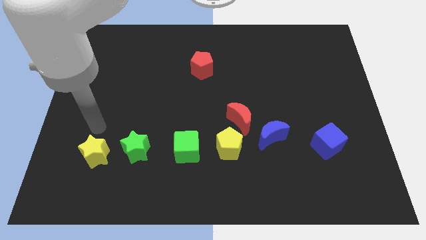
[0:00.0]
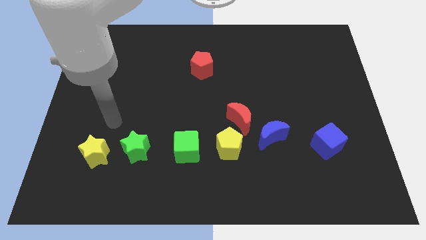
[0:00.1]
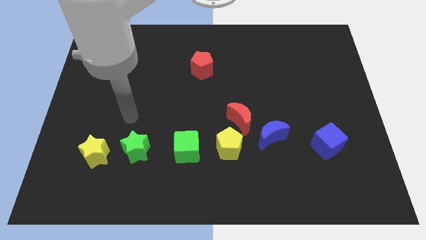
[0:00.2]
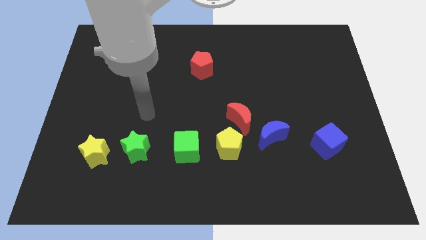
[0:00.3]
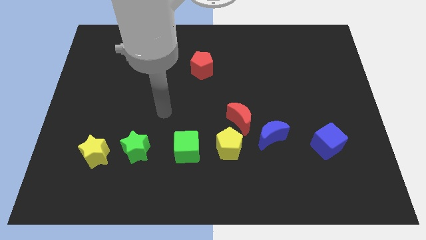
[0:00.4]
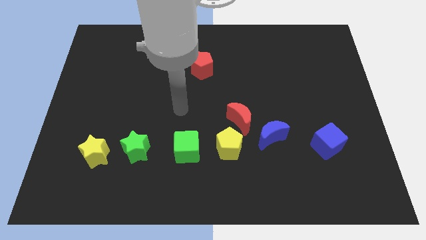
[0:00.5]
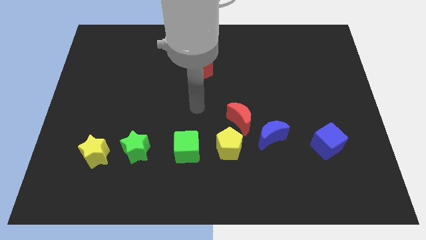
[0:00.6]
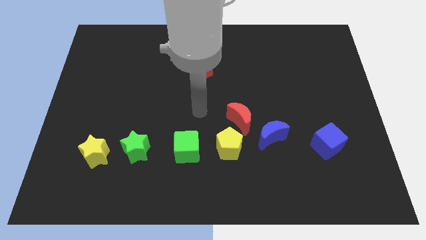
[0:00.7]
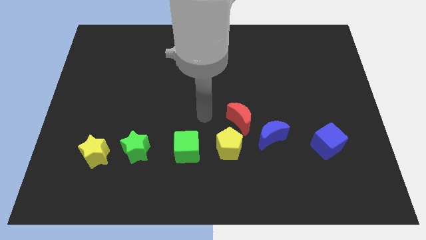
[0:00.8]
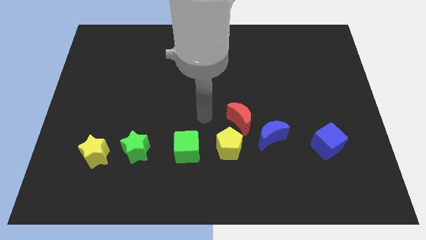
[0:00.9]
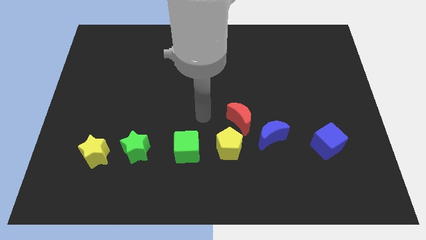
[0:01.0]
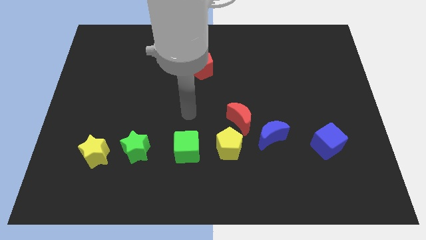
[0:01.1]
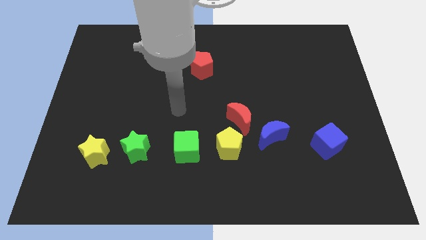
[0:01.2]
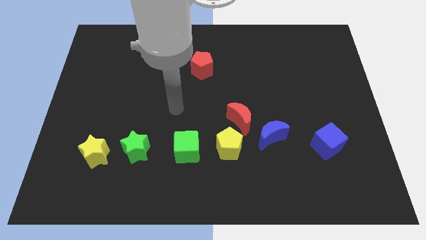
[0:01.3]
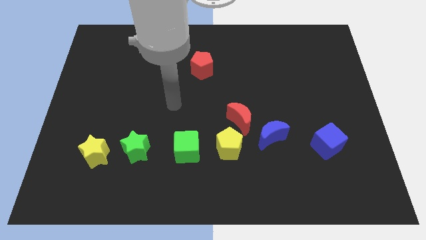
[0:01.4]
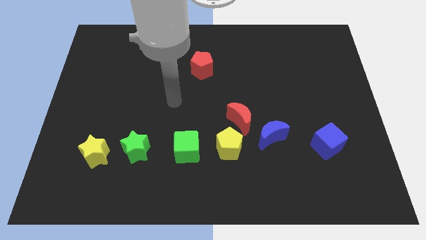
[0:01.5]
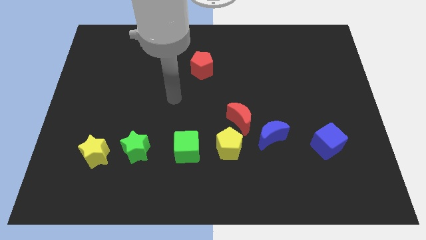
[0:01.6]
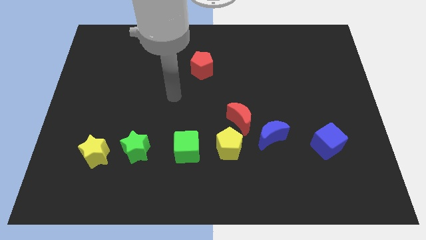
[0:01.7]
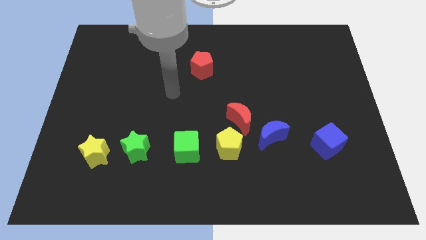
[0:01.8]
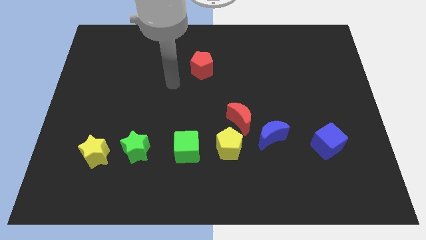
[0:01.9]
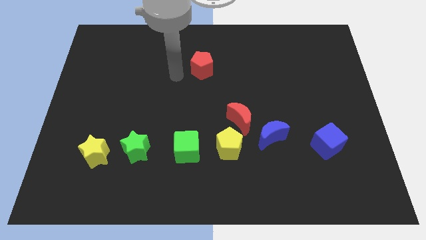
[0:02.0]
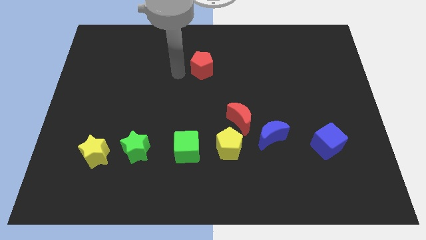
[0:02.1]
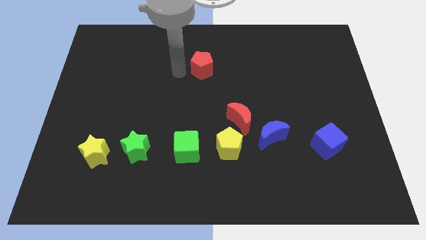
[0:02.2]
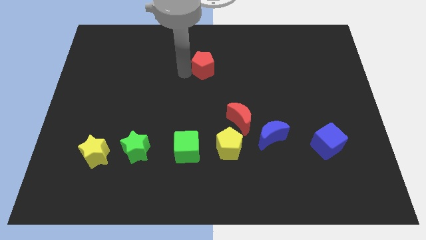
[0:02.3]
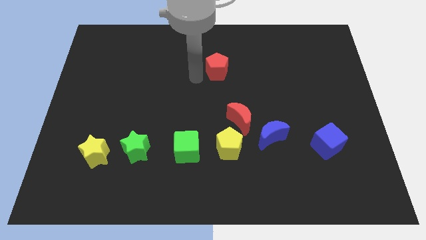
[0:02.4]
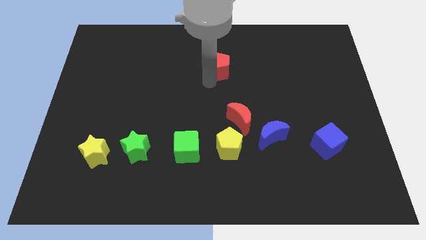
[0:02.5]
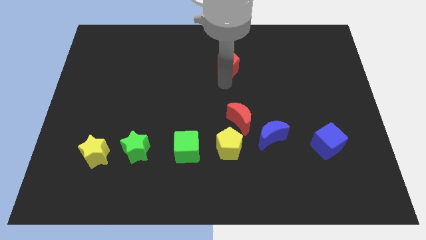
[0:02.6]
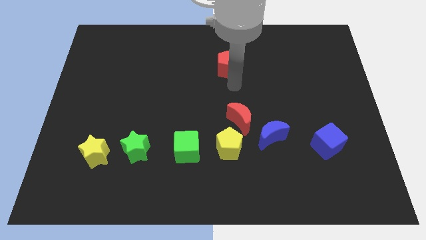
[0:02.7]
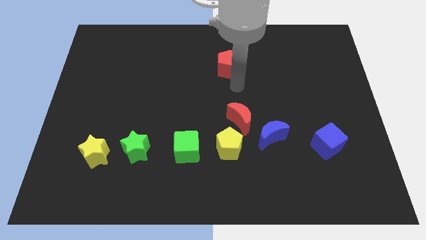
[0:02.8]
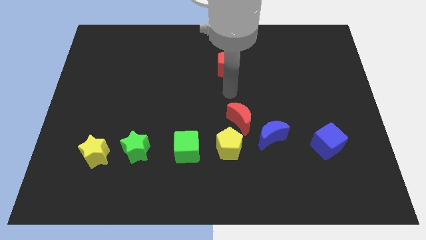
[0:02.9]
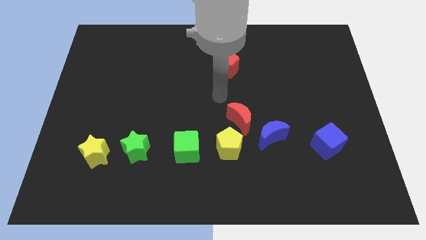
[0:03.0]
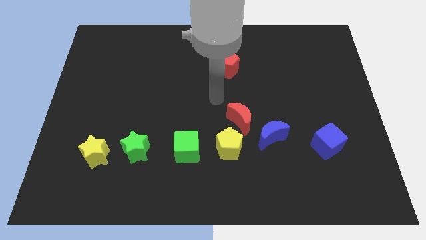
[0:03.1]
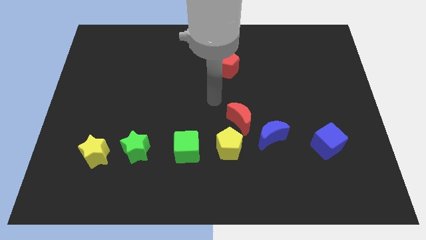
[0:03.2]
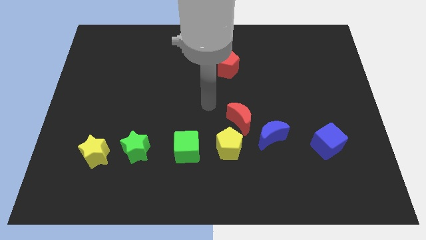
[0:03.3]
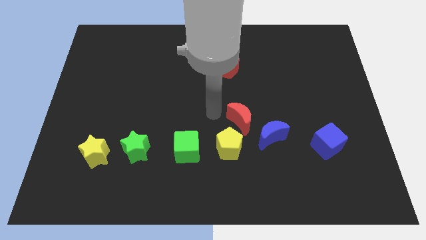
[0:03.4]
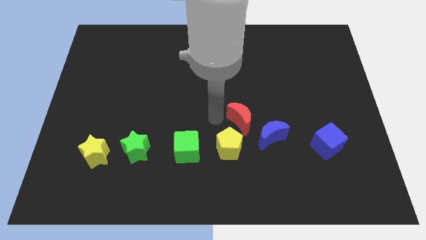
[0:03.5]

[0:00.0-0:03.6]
push the red pentagon parallel to the top of the red crescent

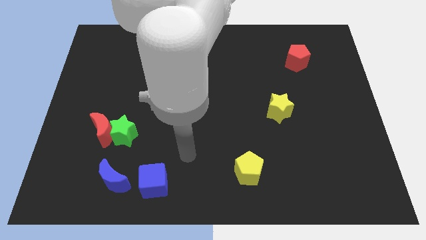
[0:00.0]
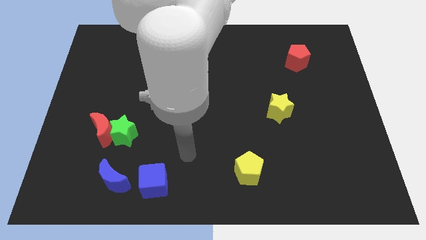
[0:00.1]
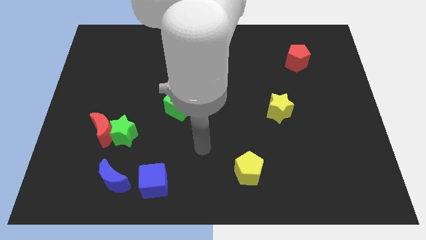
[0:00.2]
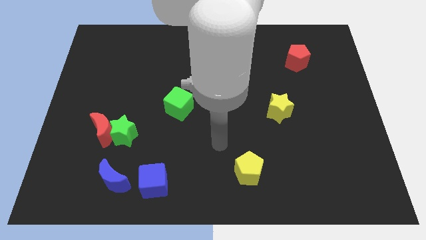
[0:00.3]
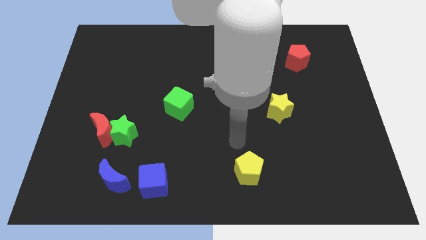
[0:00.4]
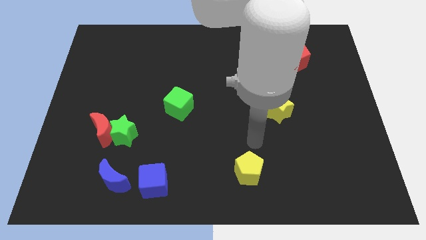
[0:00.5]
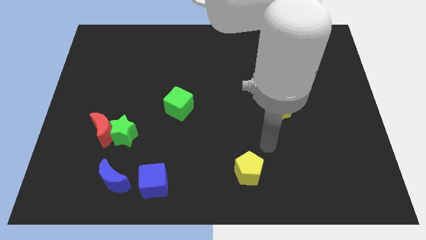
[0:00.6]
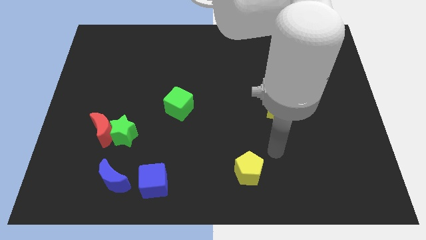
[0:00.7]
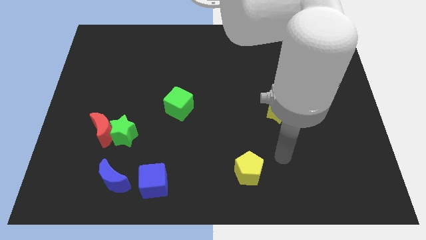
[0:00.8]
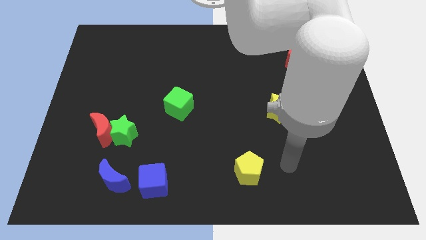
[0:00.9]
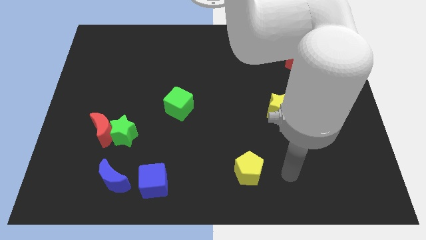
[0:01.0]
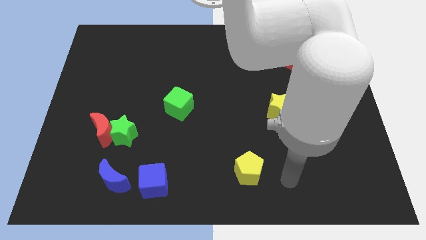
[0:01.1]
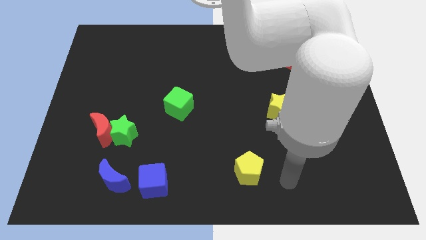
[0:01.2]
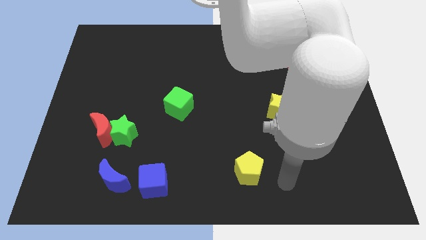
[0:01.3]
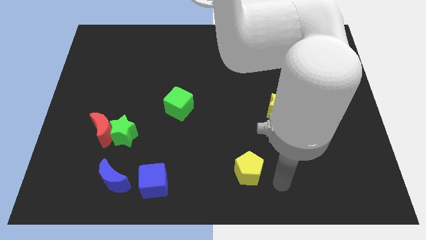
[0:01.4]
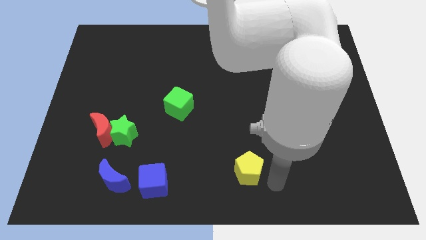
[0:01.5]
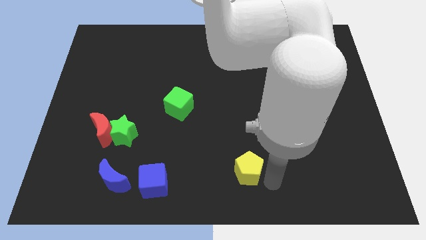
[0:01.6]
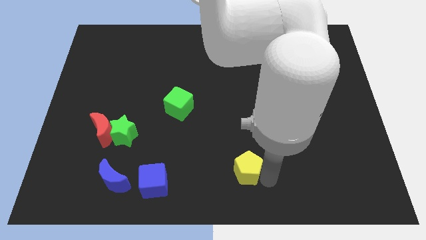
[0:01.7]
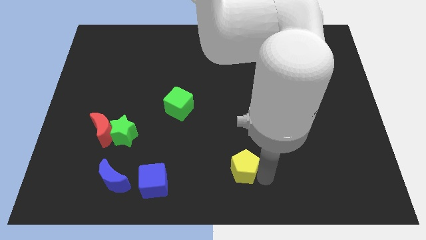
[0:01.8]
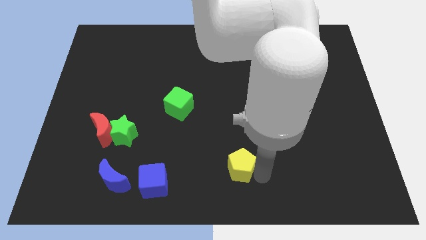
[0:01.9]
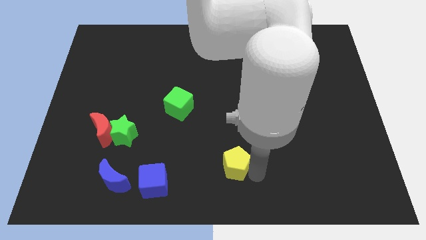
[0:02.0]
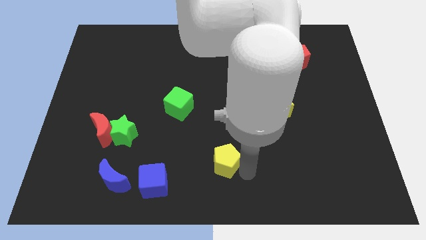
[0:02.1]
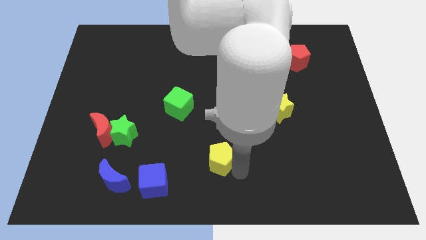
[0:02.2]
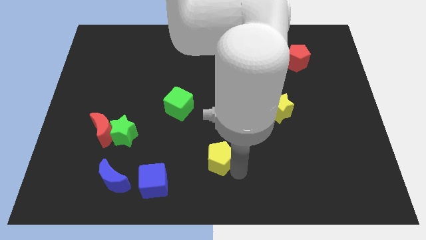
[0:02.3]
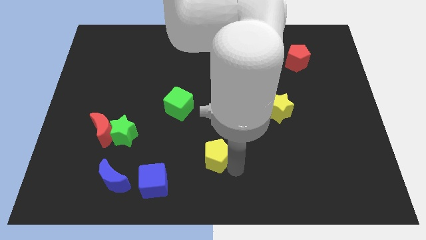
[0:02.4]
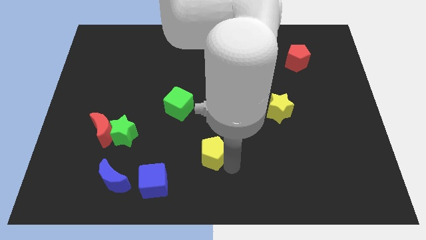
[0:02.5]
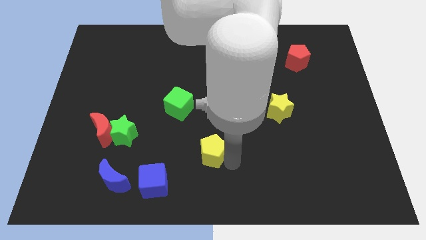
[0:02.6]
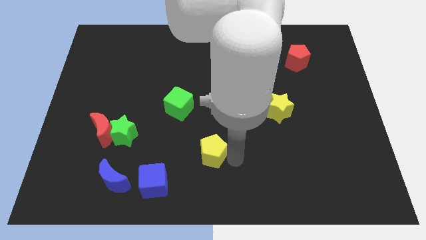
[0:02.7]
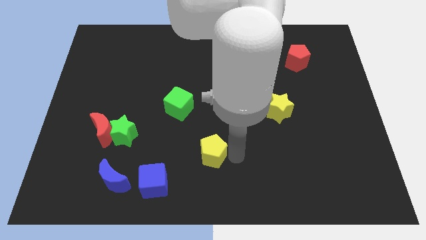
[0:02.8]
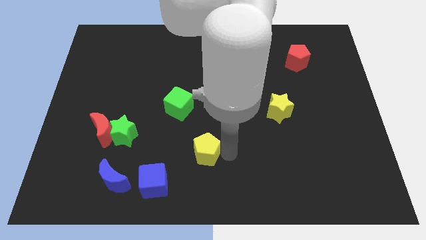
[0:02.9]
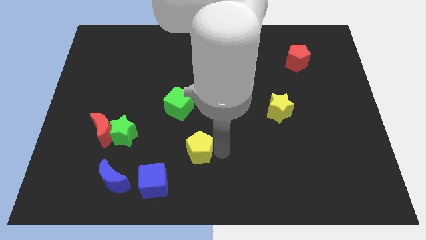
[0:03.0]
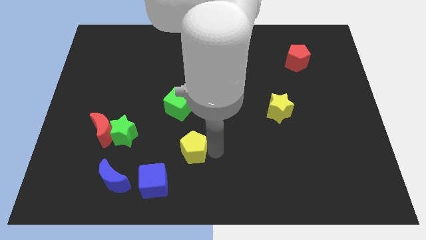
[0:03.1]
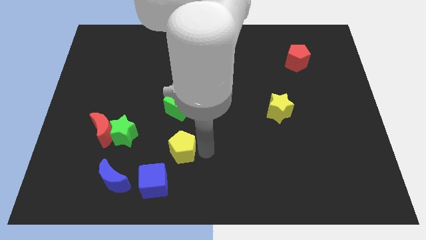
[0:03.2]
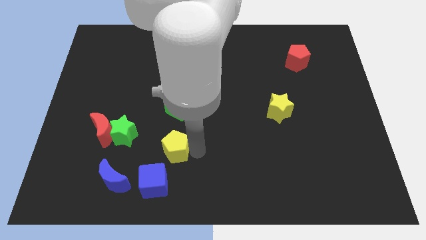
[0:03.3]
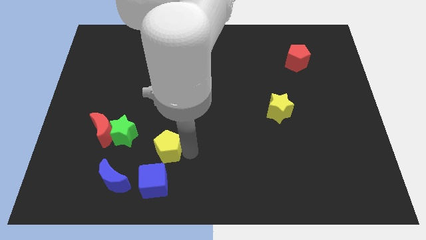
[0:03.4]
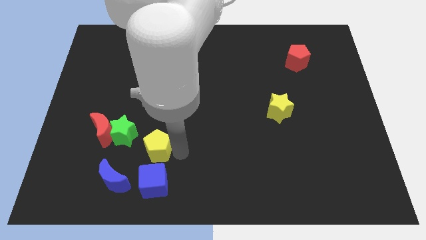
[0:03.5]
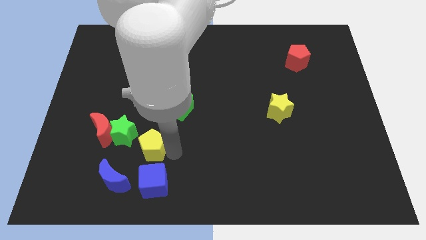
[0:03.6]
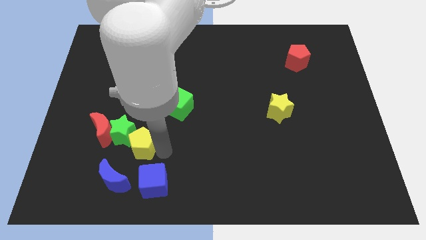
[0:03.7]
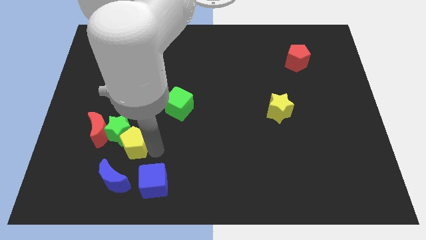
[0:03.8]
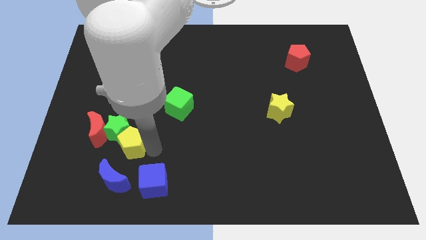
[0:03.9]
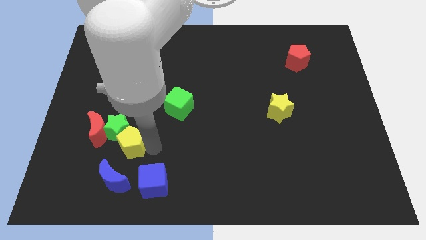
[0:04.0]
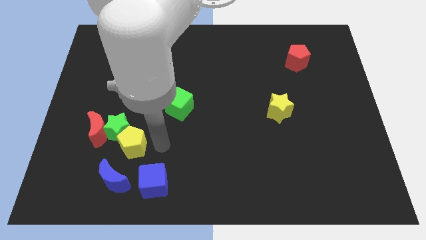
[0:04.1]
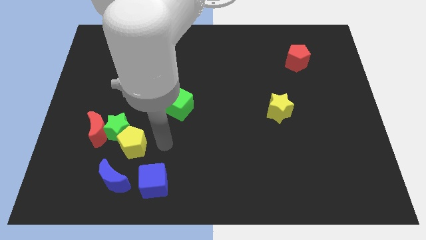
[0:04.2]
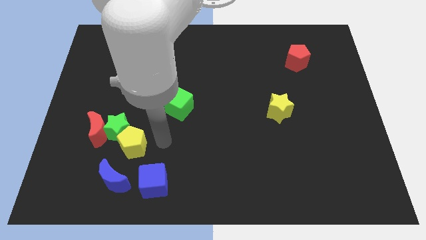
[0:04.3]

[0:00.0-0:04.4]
move the yellow pentagon into the green star

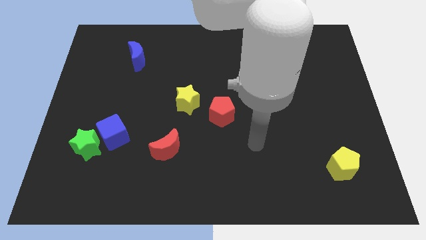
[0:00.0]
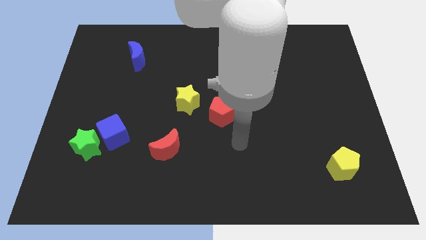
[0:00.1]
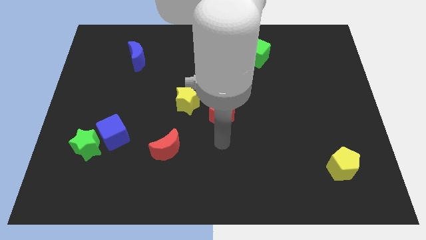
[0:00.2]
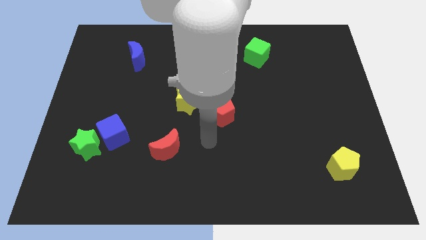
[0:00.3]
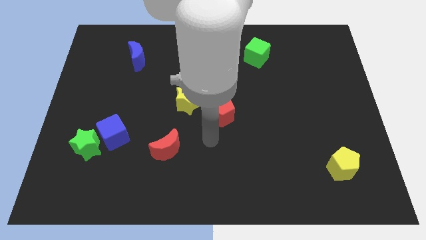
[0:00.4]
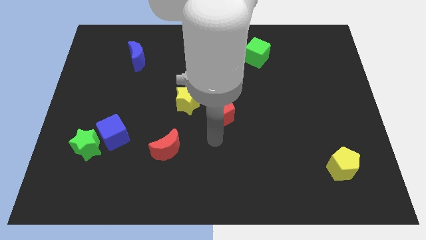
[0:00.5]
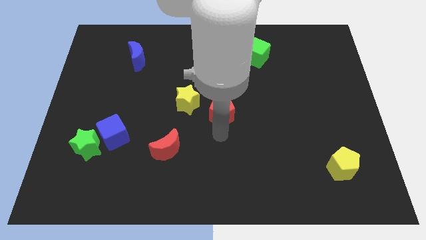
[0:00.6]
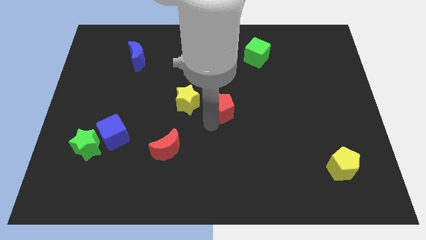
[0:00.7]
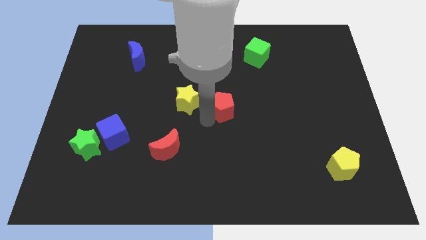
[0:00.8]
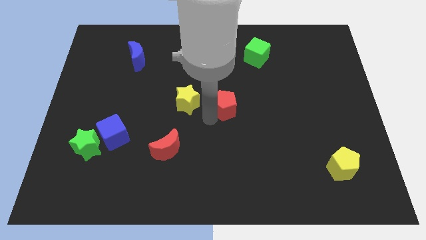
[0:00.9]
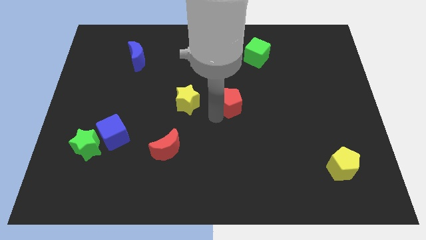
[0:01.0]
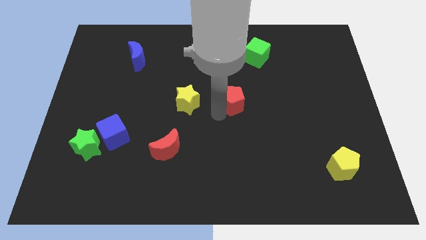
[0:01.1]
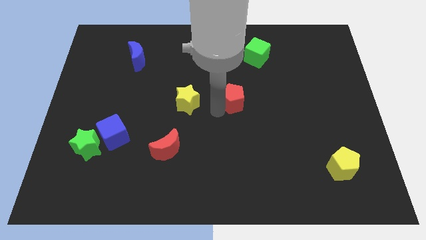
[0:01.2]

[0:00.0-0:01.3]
put the red pentagon horizontally to the right side of the yellow star
